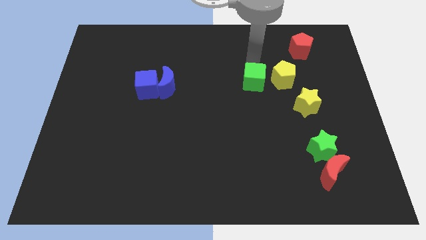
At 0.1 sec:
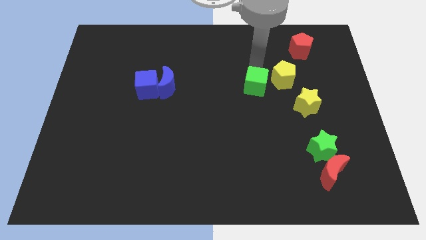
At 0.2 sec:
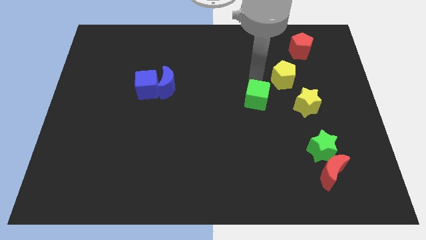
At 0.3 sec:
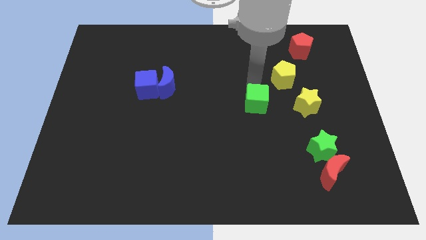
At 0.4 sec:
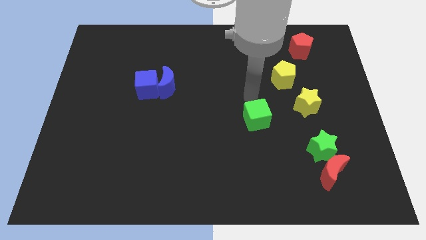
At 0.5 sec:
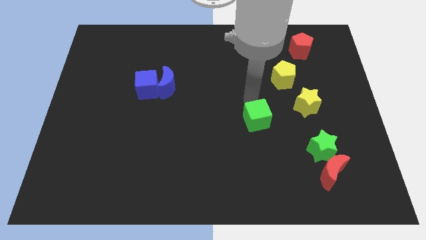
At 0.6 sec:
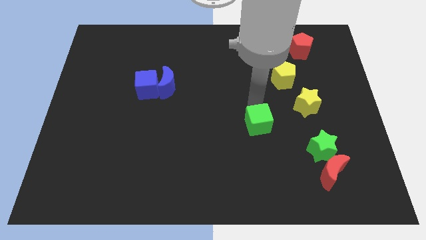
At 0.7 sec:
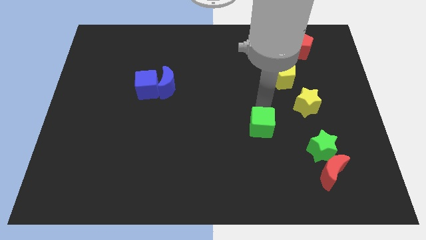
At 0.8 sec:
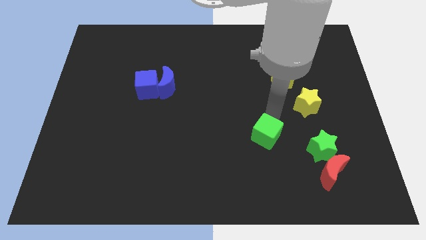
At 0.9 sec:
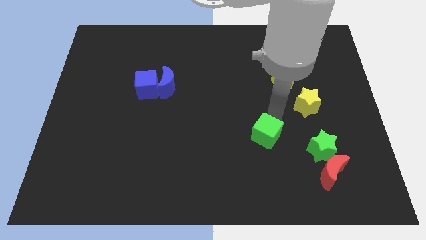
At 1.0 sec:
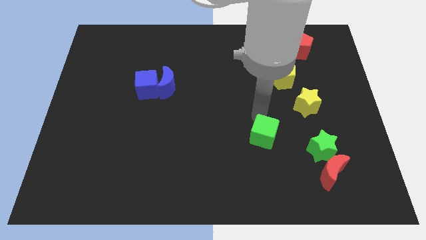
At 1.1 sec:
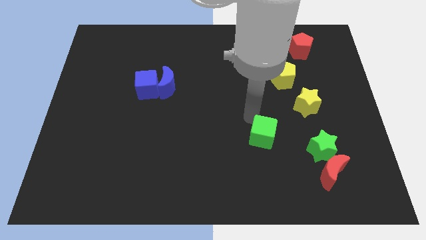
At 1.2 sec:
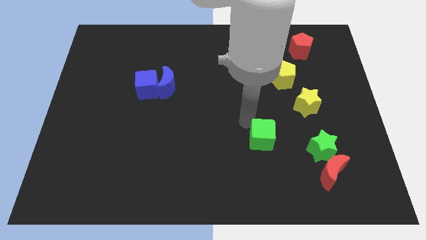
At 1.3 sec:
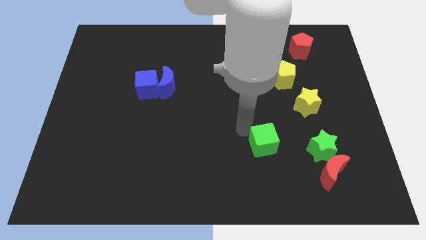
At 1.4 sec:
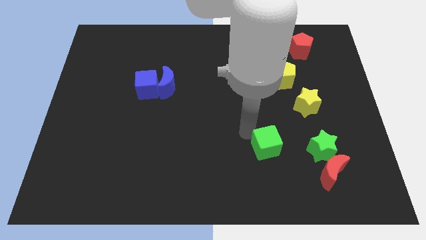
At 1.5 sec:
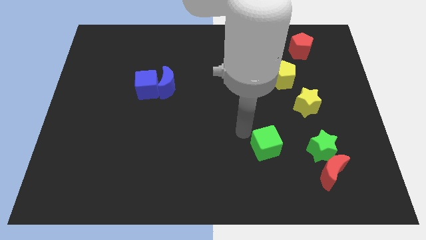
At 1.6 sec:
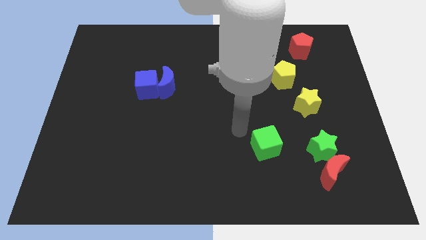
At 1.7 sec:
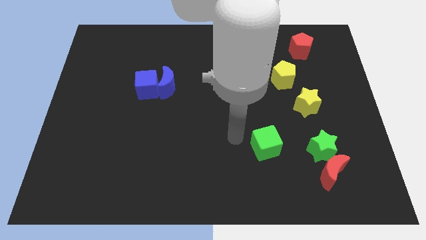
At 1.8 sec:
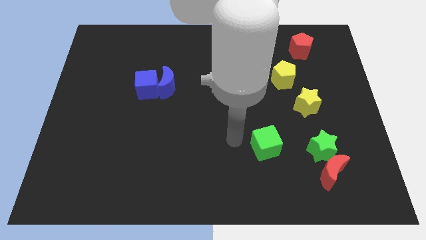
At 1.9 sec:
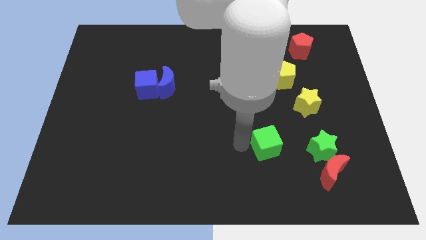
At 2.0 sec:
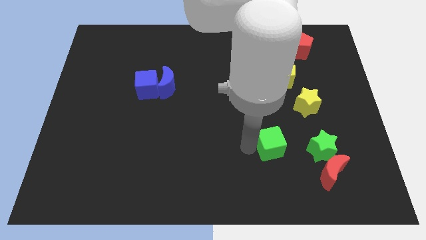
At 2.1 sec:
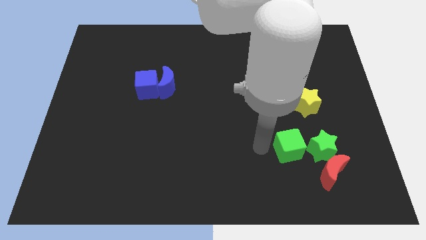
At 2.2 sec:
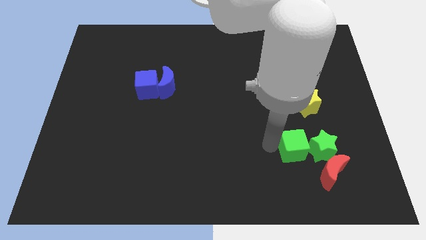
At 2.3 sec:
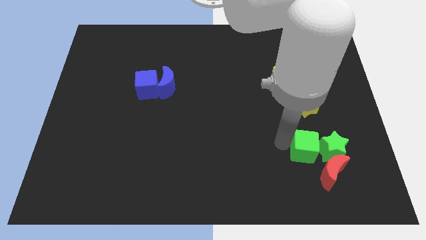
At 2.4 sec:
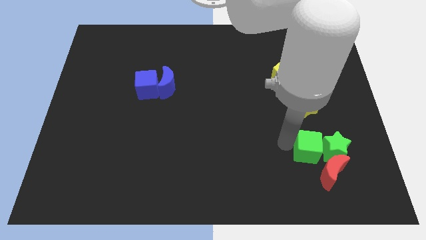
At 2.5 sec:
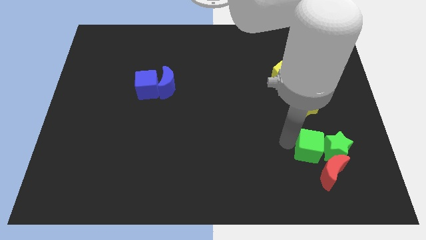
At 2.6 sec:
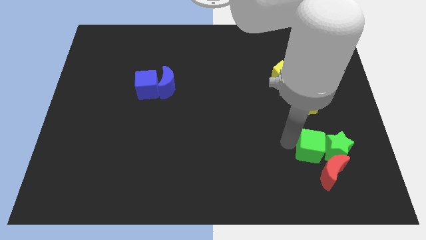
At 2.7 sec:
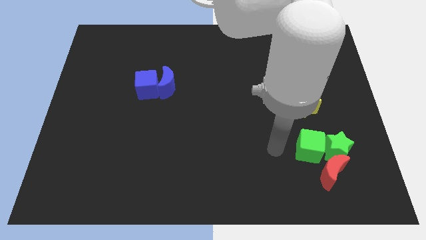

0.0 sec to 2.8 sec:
push the green cube into the green star

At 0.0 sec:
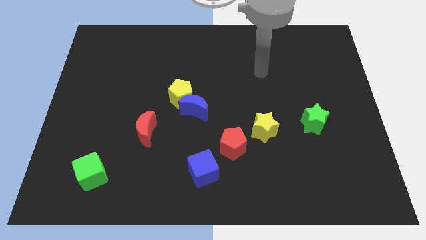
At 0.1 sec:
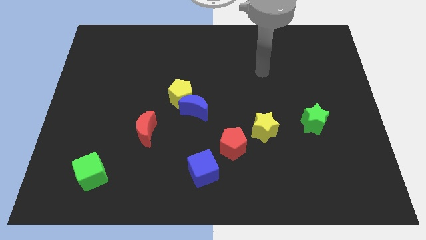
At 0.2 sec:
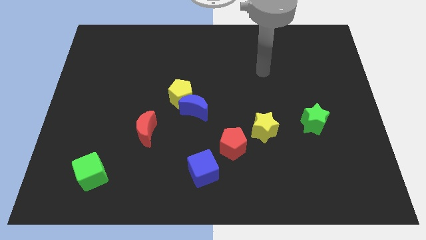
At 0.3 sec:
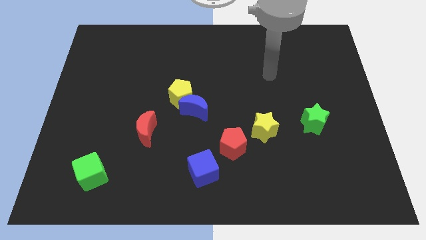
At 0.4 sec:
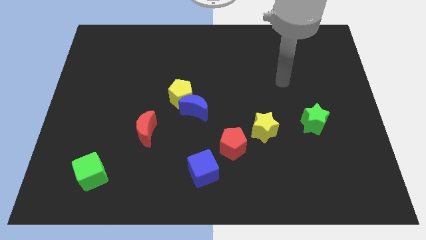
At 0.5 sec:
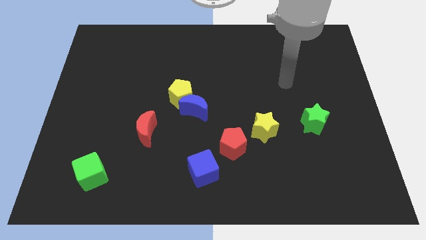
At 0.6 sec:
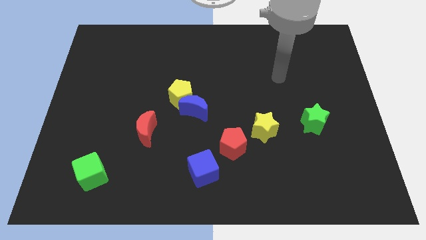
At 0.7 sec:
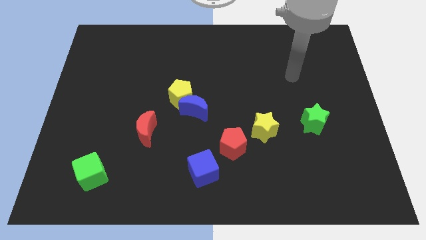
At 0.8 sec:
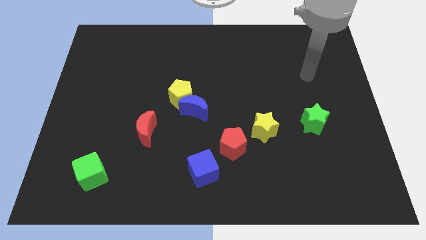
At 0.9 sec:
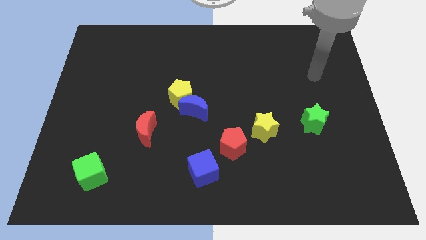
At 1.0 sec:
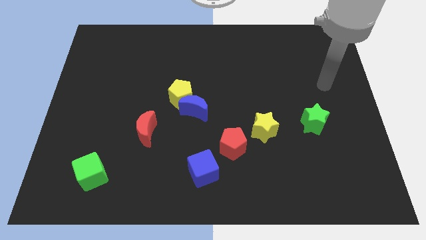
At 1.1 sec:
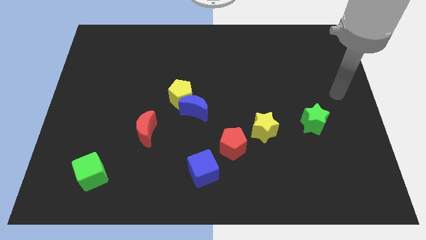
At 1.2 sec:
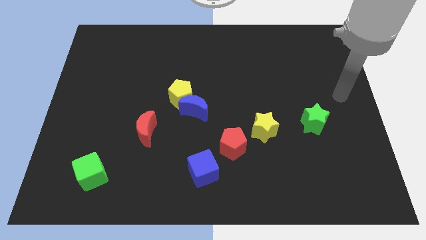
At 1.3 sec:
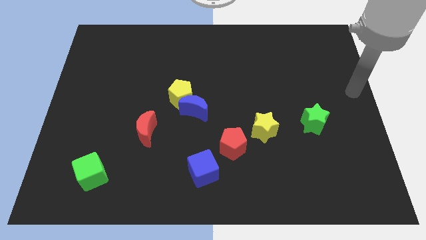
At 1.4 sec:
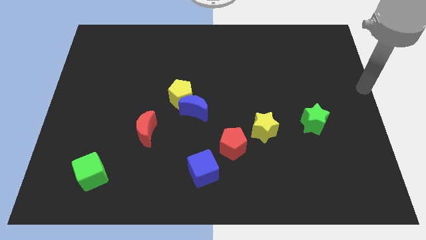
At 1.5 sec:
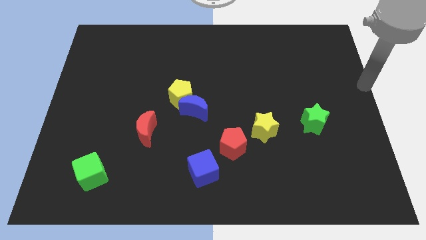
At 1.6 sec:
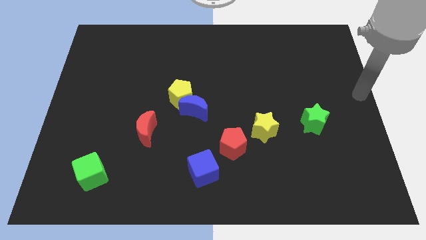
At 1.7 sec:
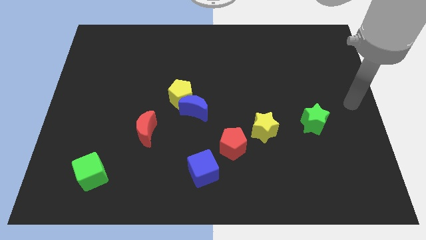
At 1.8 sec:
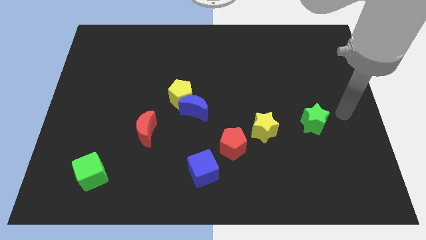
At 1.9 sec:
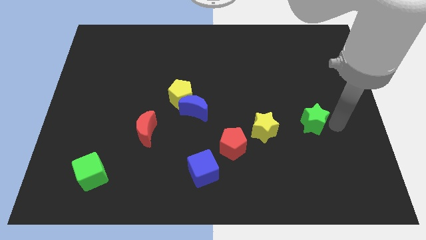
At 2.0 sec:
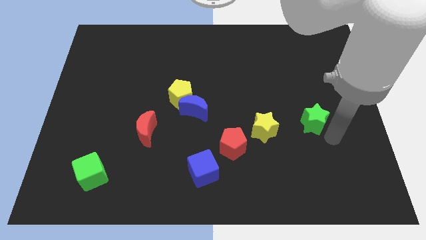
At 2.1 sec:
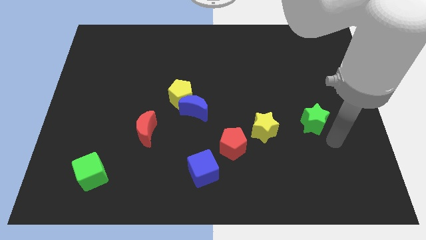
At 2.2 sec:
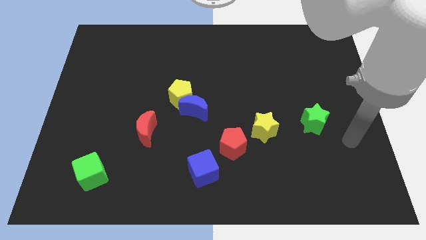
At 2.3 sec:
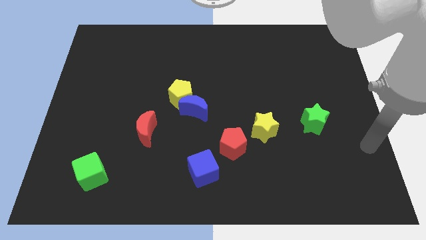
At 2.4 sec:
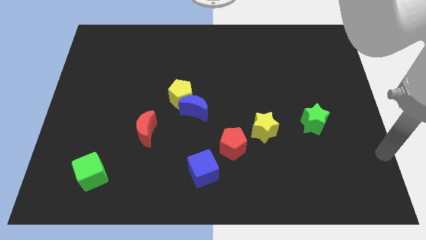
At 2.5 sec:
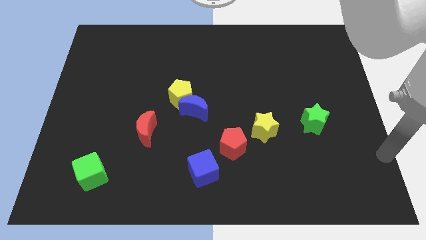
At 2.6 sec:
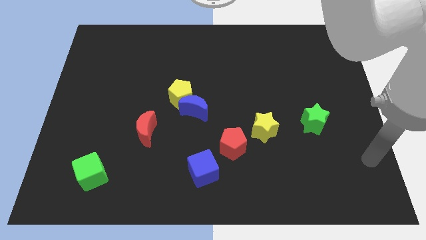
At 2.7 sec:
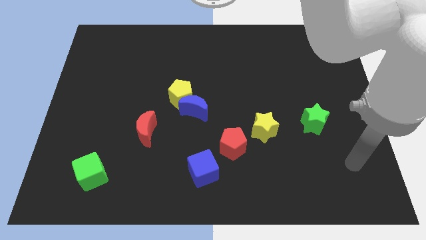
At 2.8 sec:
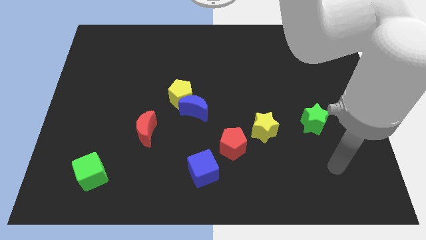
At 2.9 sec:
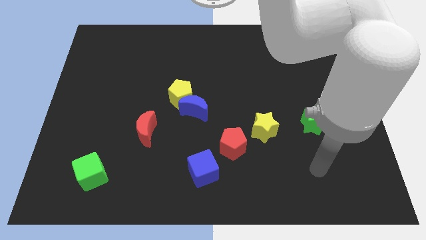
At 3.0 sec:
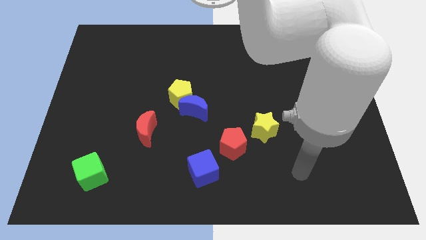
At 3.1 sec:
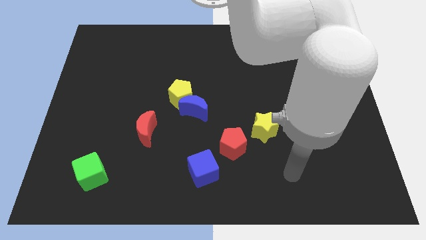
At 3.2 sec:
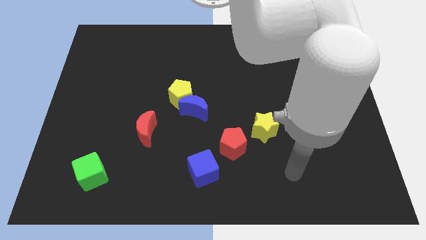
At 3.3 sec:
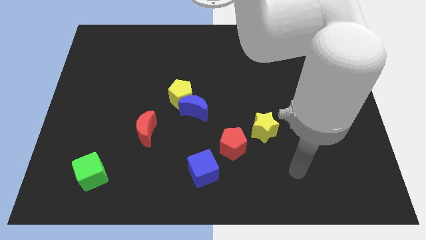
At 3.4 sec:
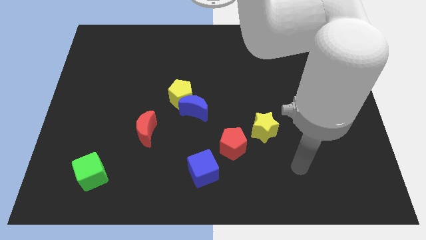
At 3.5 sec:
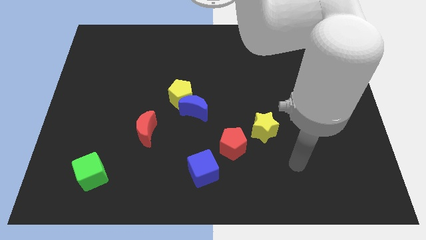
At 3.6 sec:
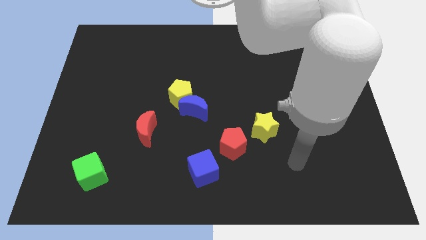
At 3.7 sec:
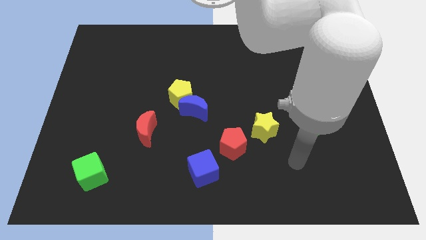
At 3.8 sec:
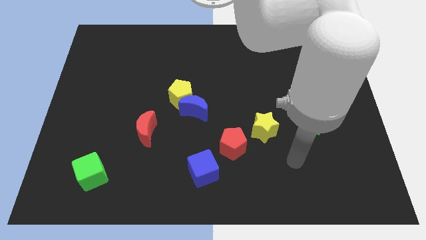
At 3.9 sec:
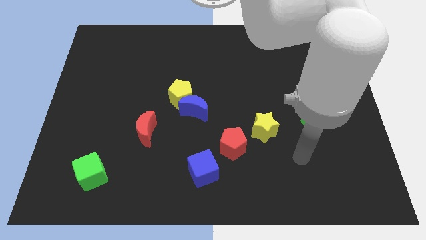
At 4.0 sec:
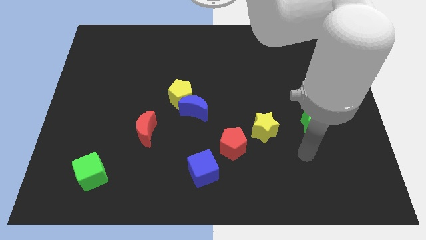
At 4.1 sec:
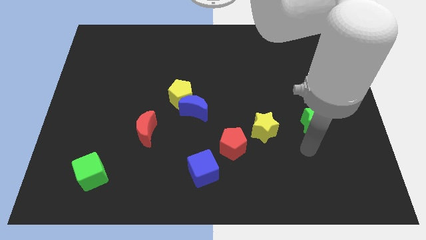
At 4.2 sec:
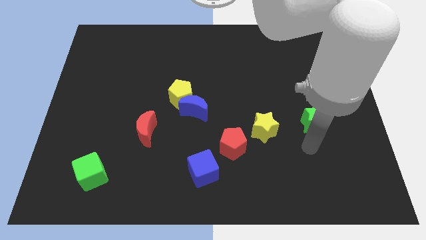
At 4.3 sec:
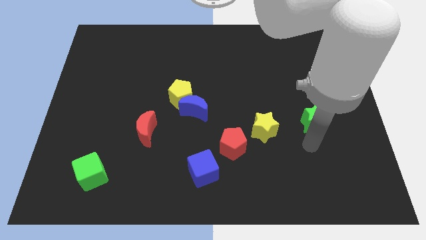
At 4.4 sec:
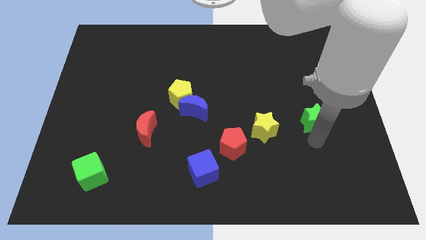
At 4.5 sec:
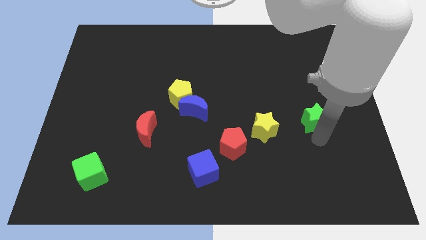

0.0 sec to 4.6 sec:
place your arm close to the green star

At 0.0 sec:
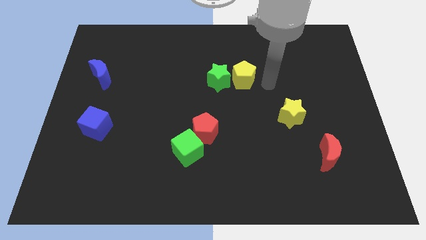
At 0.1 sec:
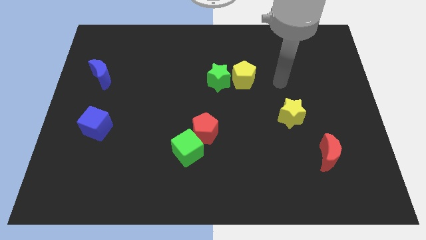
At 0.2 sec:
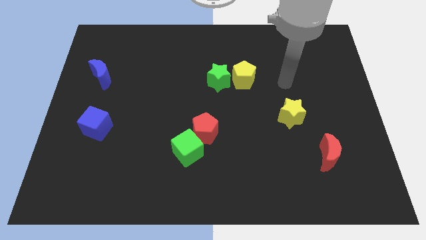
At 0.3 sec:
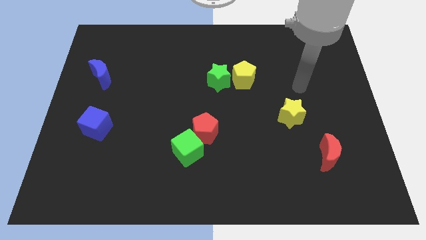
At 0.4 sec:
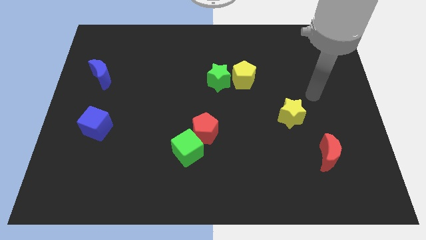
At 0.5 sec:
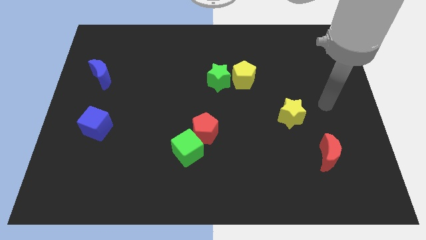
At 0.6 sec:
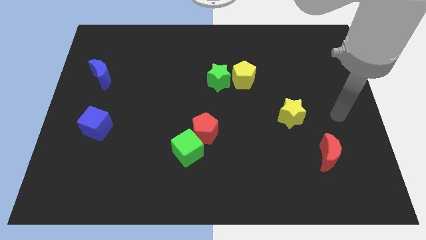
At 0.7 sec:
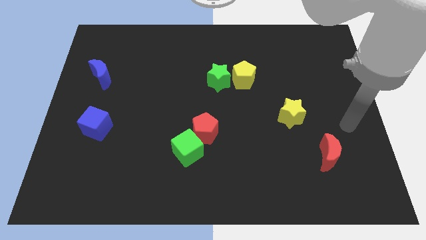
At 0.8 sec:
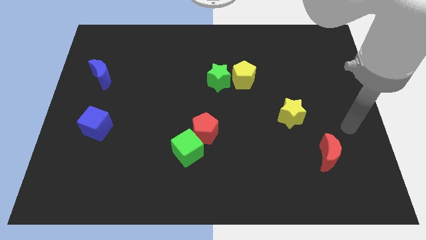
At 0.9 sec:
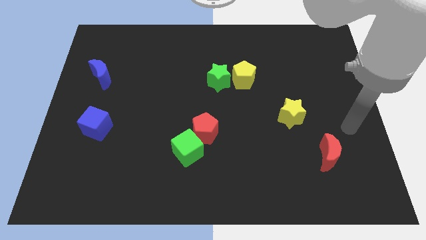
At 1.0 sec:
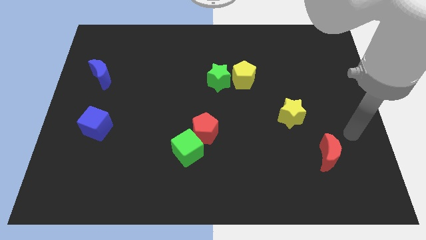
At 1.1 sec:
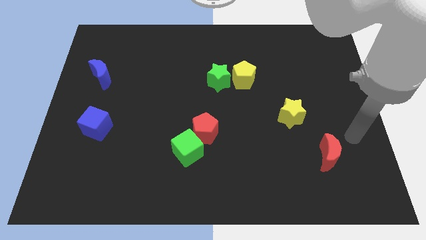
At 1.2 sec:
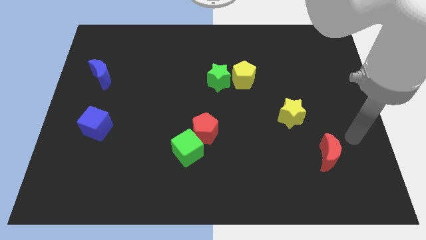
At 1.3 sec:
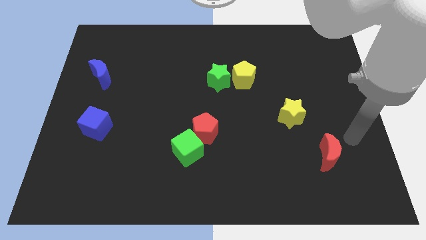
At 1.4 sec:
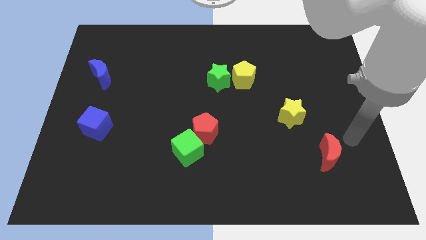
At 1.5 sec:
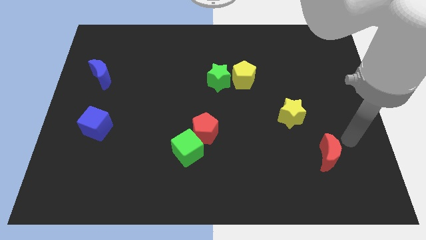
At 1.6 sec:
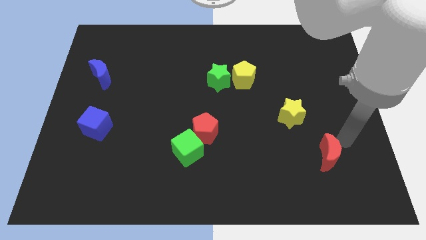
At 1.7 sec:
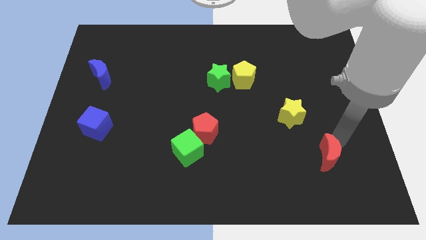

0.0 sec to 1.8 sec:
point your arm at the top right side of red moon
